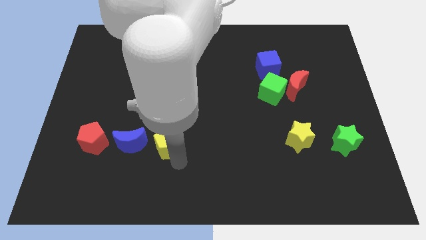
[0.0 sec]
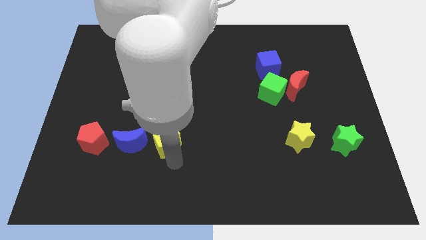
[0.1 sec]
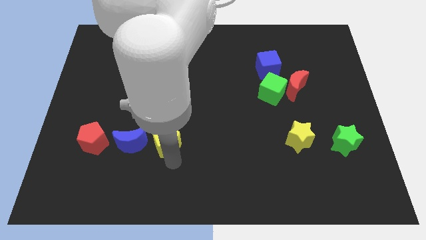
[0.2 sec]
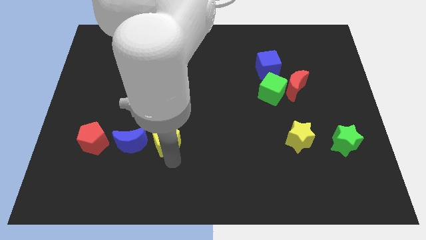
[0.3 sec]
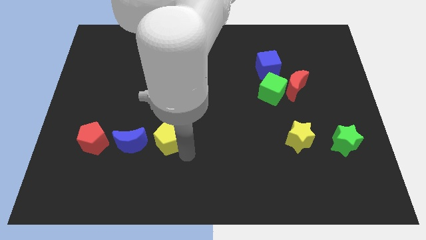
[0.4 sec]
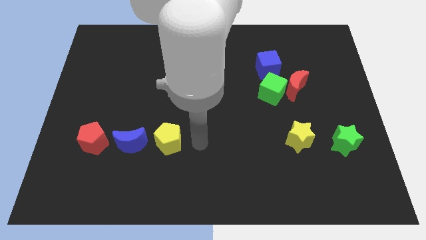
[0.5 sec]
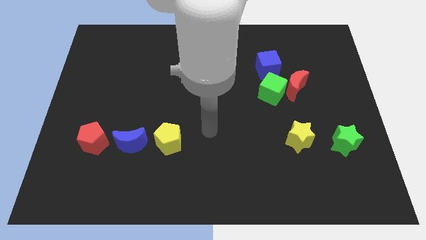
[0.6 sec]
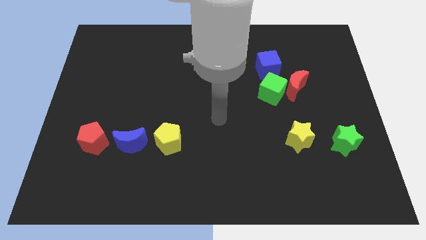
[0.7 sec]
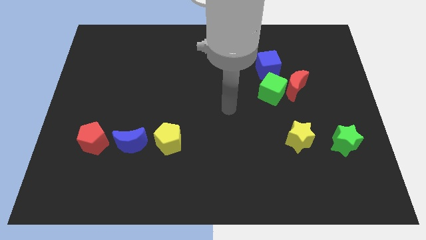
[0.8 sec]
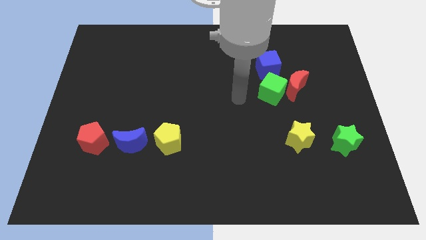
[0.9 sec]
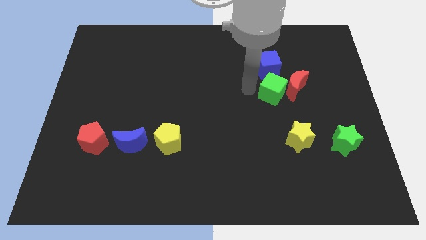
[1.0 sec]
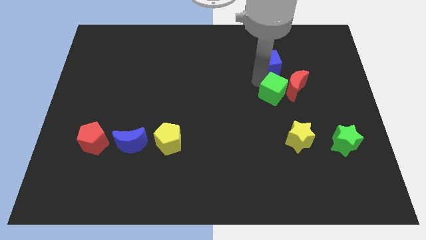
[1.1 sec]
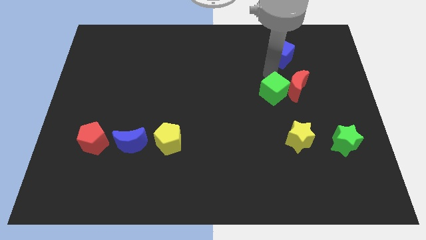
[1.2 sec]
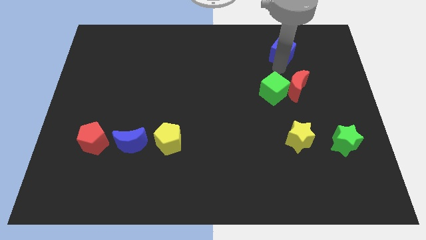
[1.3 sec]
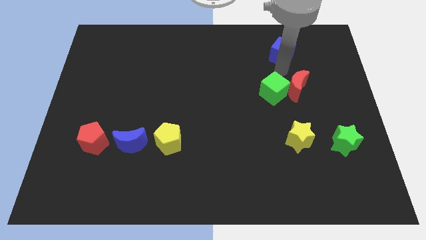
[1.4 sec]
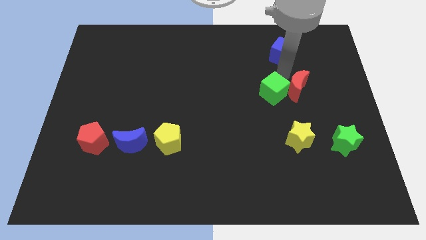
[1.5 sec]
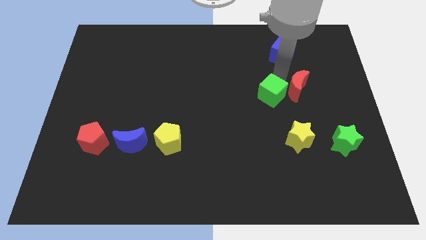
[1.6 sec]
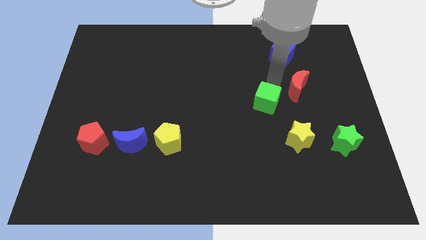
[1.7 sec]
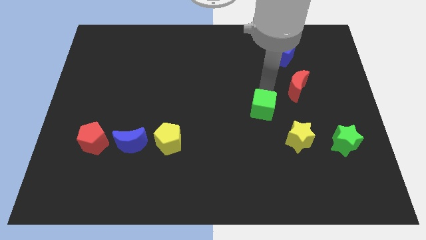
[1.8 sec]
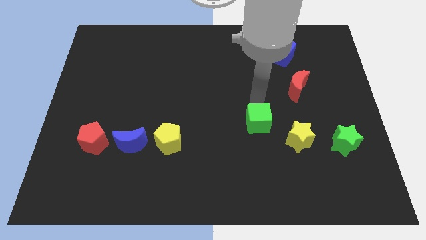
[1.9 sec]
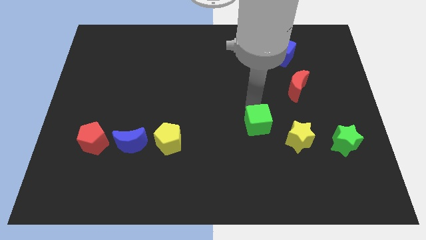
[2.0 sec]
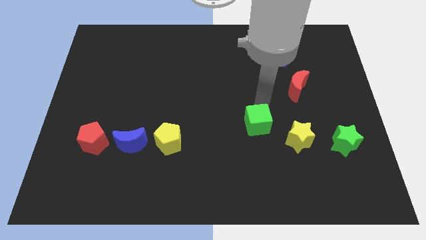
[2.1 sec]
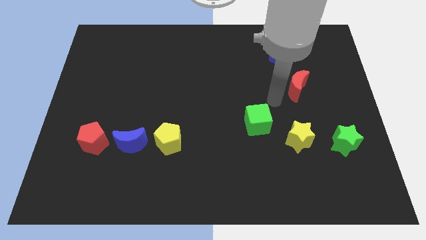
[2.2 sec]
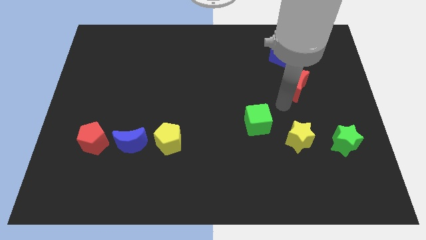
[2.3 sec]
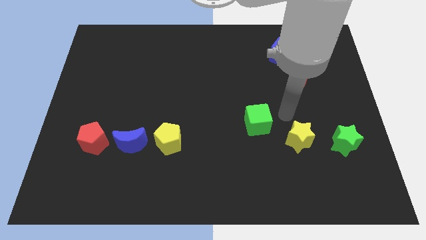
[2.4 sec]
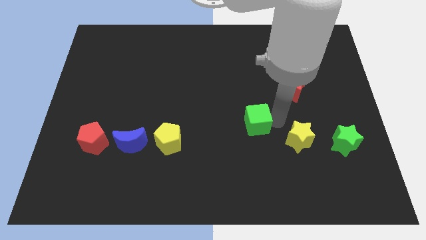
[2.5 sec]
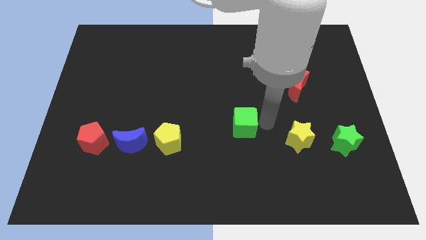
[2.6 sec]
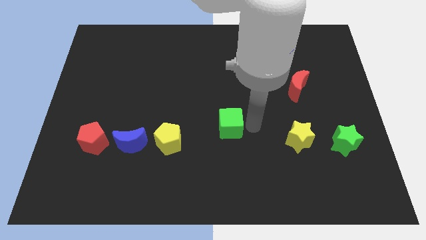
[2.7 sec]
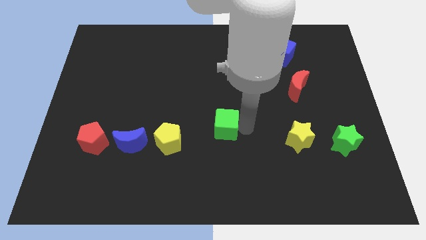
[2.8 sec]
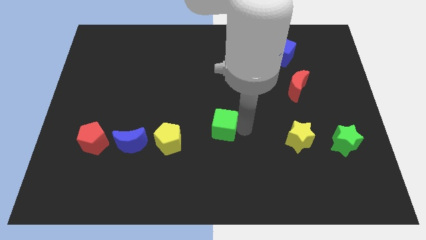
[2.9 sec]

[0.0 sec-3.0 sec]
separate the green cube and blue cube

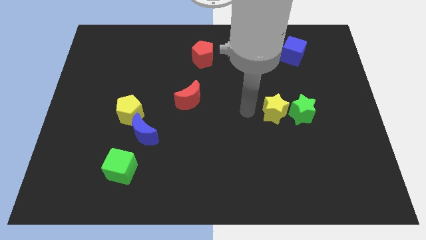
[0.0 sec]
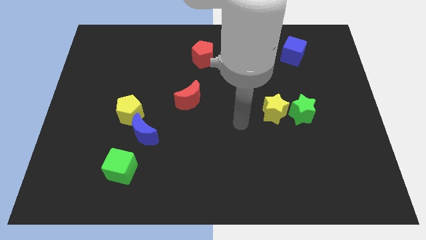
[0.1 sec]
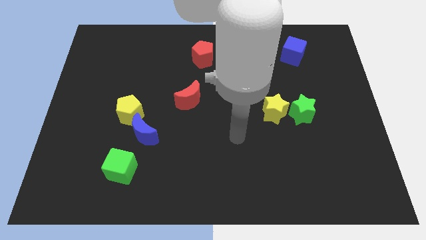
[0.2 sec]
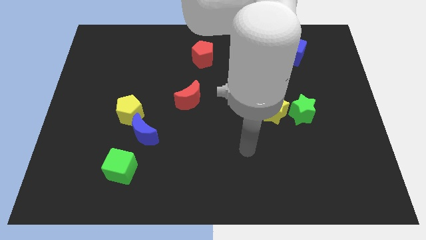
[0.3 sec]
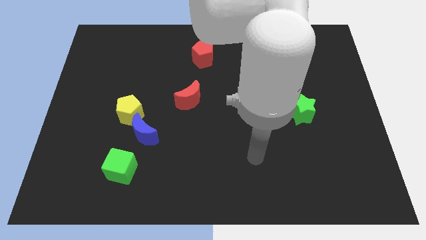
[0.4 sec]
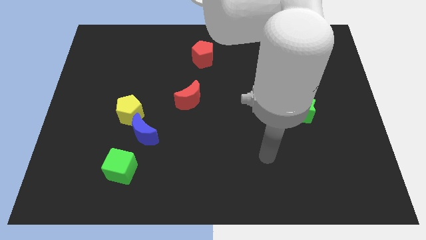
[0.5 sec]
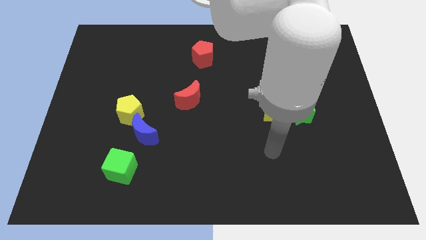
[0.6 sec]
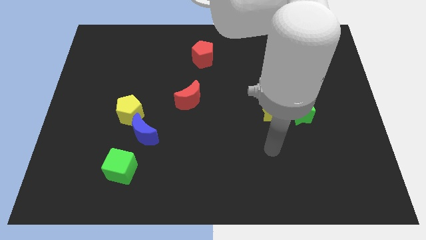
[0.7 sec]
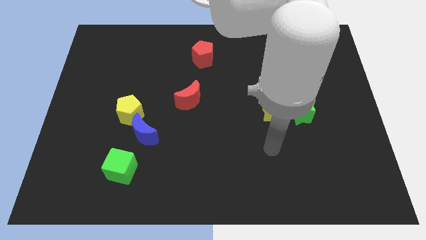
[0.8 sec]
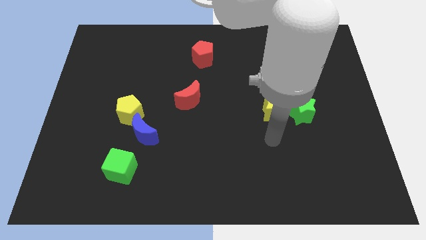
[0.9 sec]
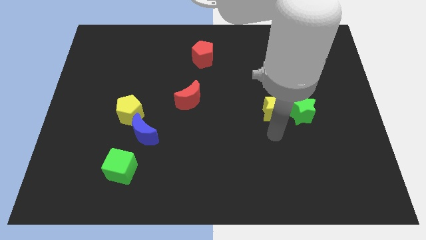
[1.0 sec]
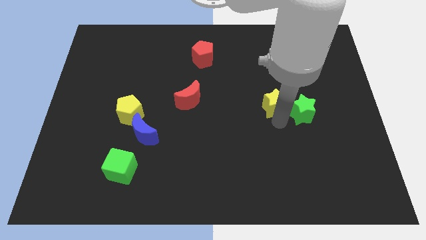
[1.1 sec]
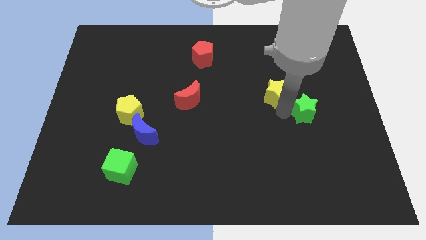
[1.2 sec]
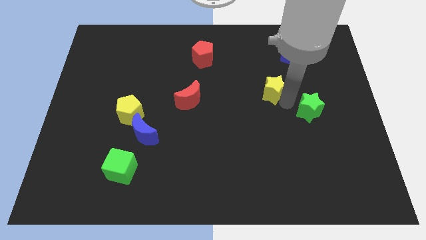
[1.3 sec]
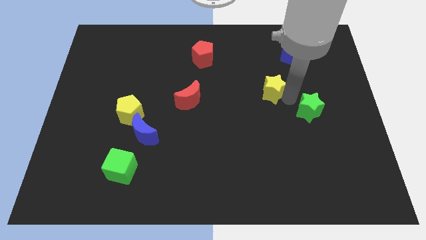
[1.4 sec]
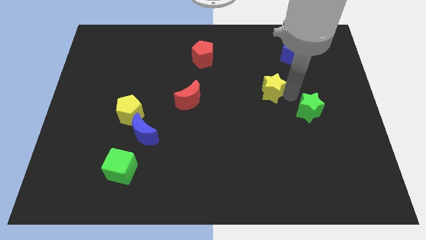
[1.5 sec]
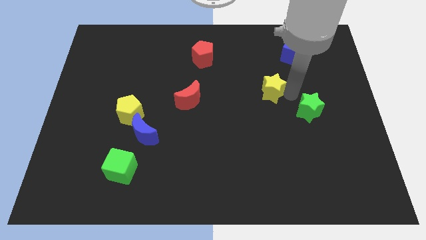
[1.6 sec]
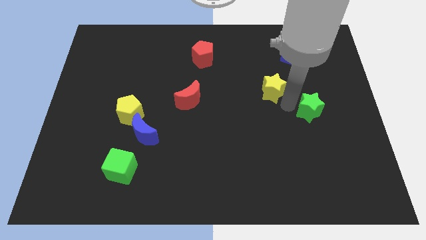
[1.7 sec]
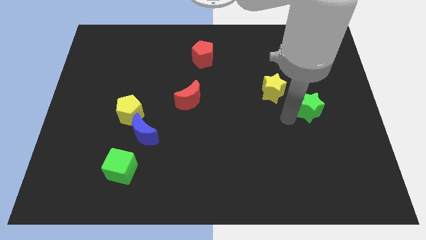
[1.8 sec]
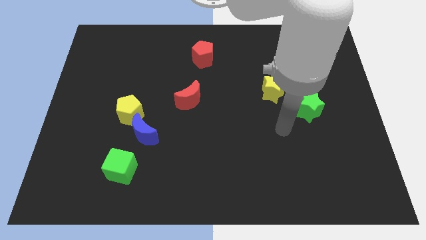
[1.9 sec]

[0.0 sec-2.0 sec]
separate the yellow star and green star

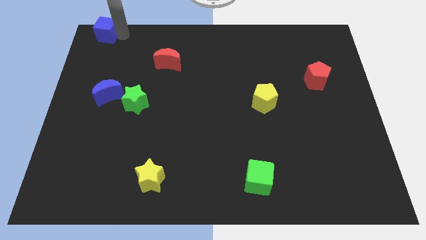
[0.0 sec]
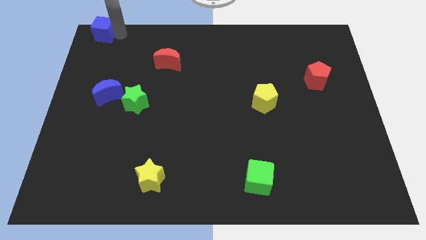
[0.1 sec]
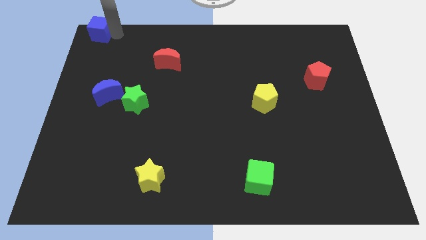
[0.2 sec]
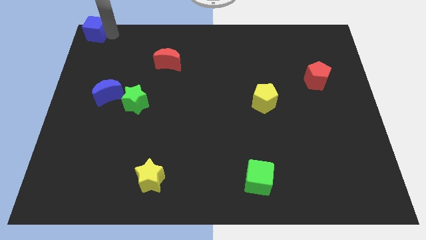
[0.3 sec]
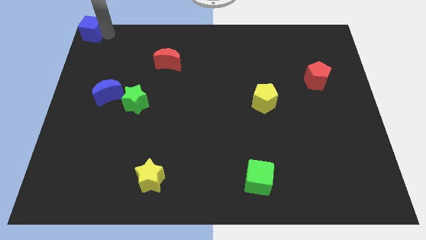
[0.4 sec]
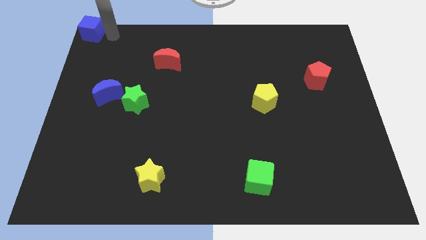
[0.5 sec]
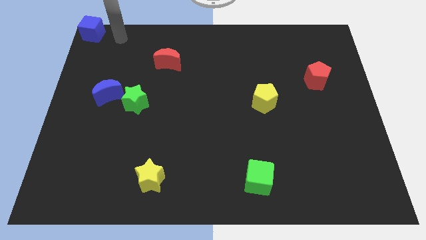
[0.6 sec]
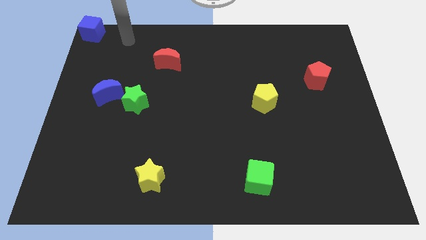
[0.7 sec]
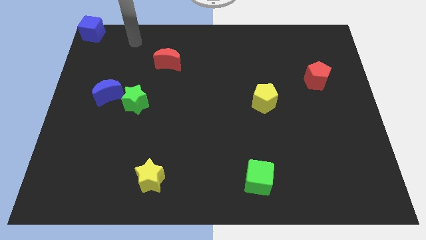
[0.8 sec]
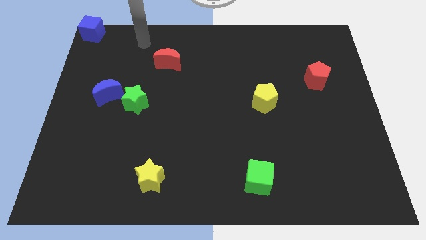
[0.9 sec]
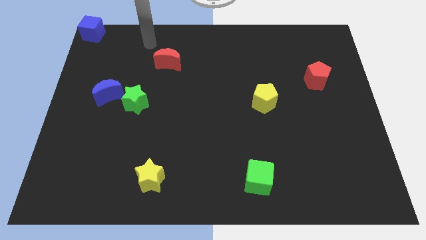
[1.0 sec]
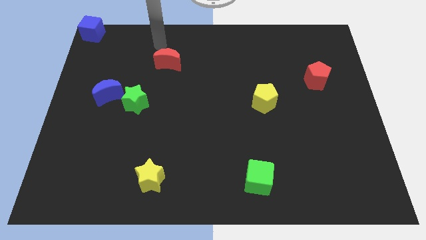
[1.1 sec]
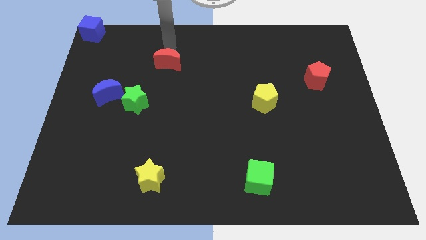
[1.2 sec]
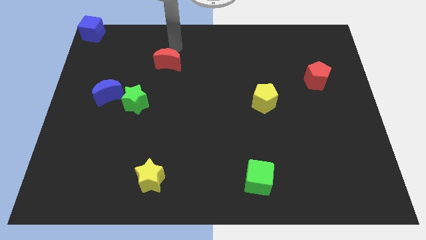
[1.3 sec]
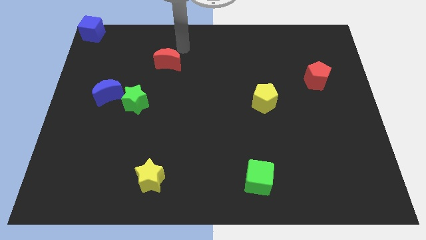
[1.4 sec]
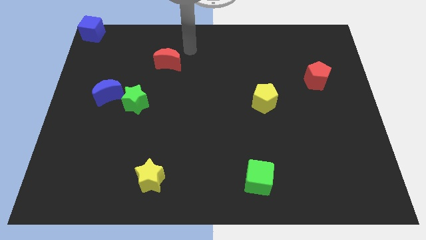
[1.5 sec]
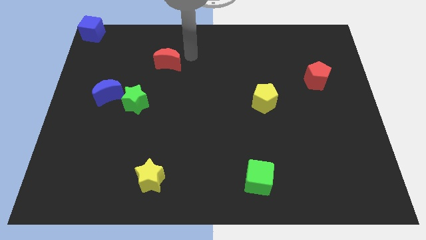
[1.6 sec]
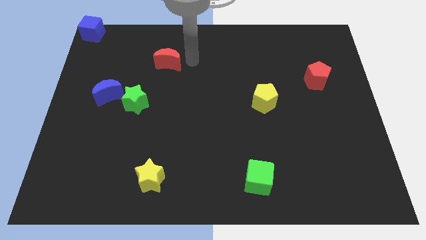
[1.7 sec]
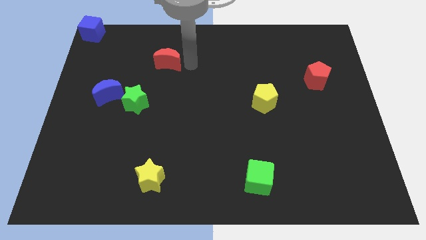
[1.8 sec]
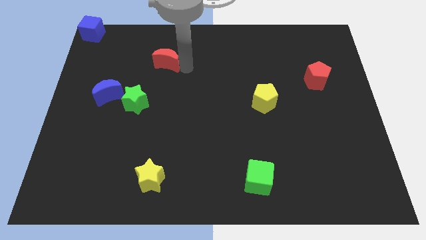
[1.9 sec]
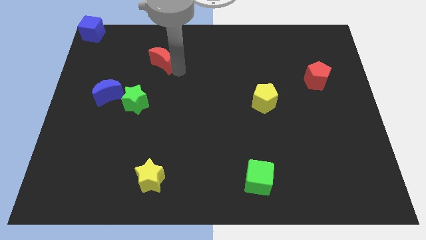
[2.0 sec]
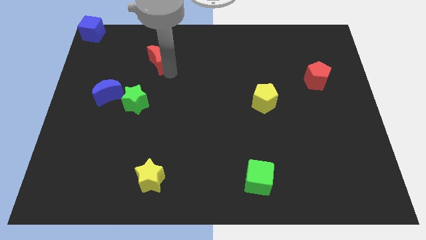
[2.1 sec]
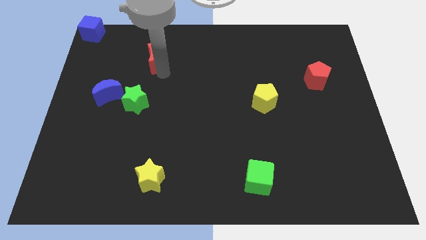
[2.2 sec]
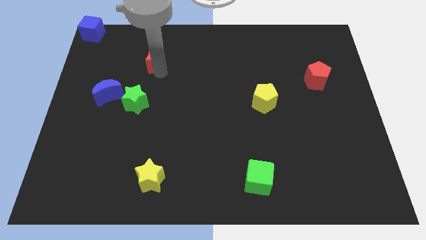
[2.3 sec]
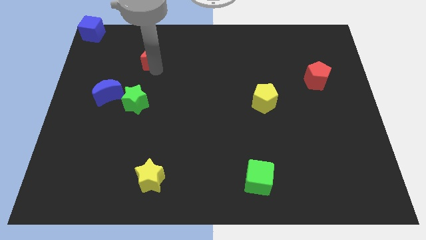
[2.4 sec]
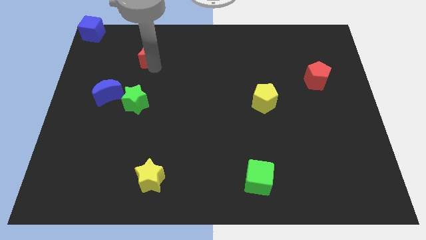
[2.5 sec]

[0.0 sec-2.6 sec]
push the blue cube to the top left corner of the board

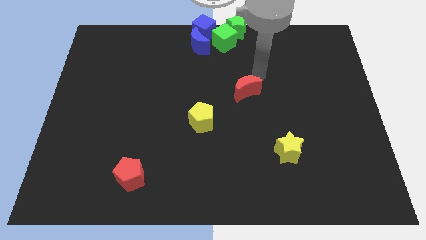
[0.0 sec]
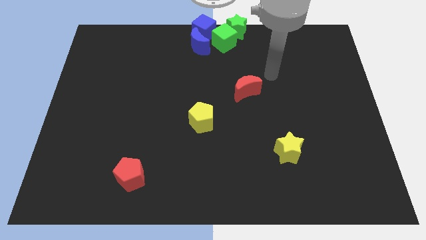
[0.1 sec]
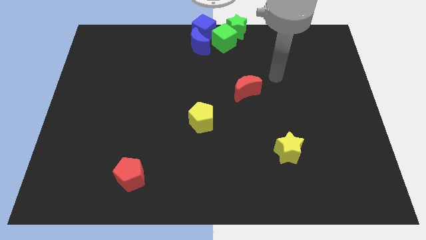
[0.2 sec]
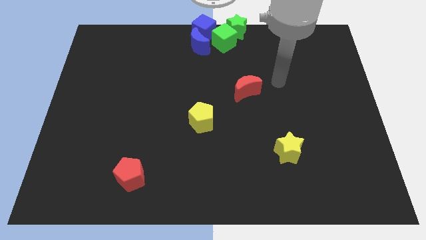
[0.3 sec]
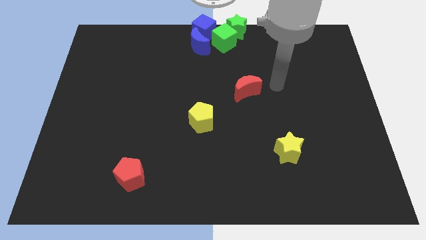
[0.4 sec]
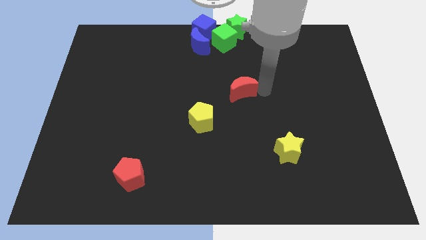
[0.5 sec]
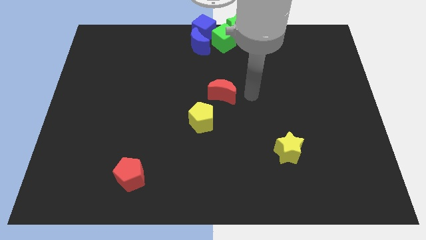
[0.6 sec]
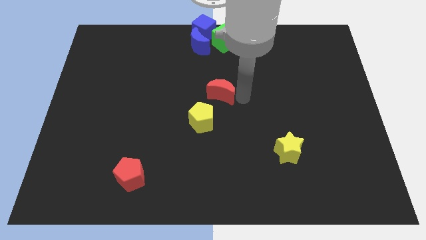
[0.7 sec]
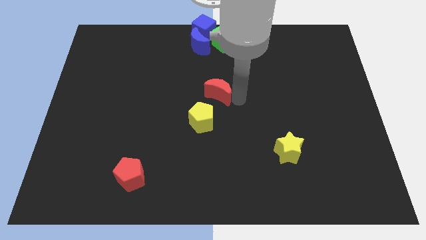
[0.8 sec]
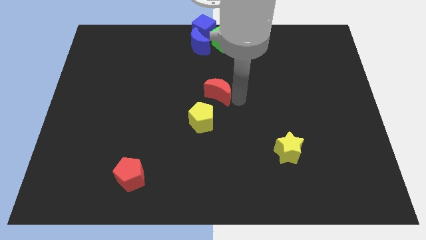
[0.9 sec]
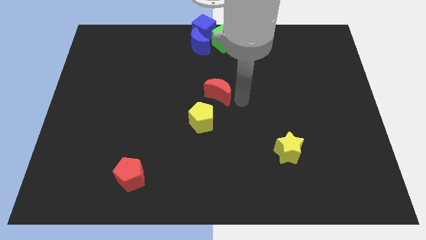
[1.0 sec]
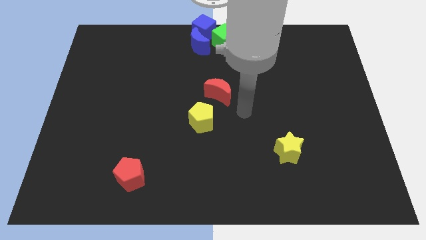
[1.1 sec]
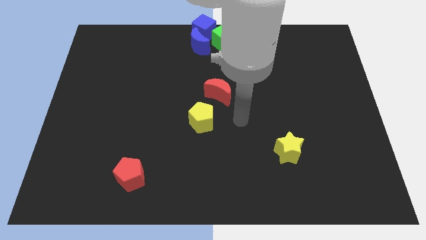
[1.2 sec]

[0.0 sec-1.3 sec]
move the red crescent slightly towards the yellow pentagon at the center of the board
